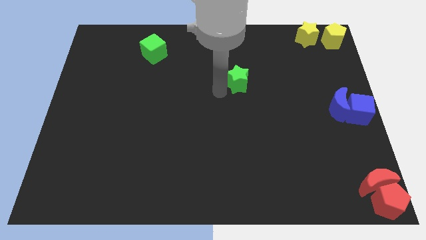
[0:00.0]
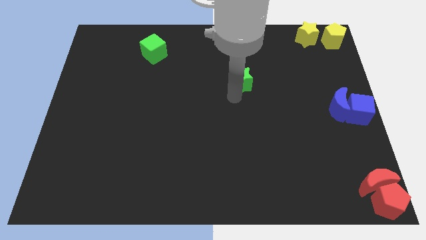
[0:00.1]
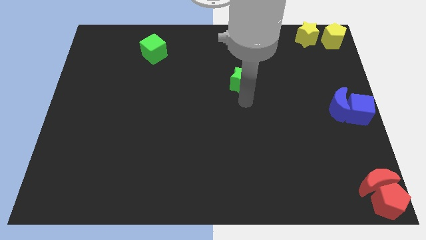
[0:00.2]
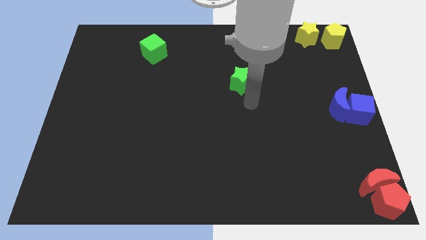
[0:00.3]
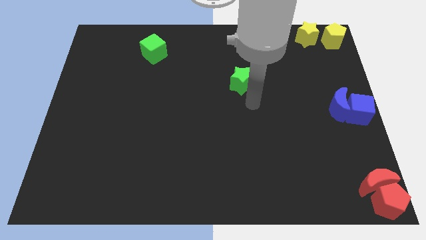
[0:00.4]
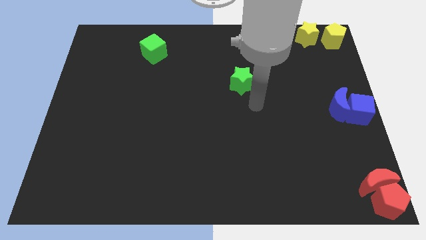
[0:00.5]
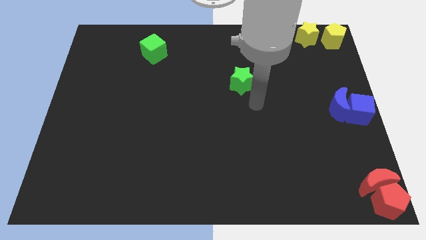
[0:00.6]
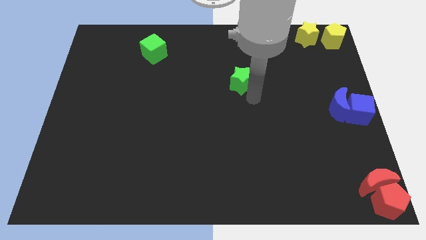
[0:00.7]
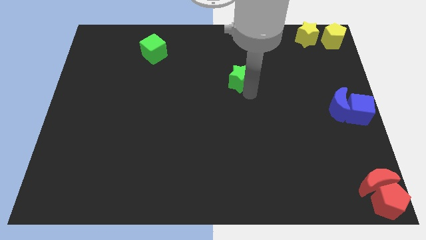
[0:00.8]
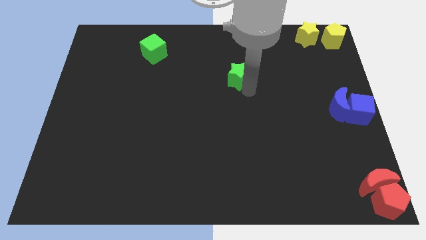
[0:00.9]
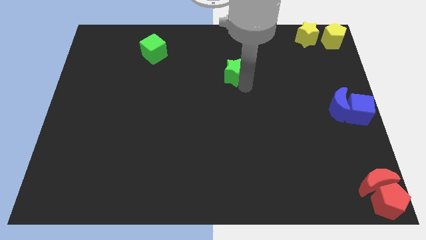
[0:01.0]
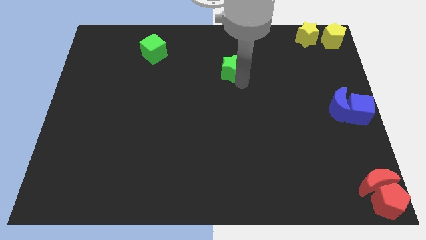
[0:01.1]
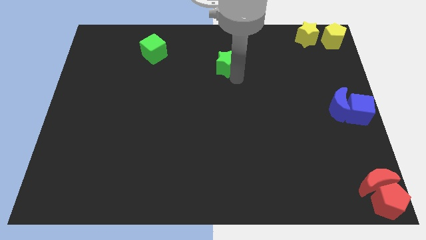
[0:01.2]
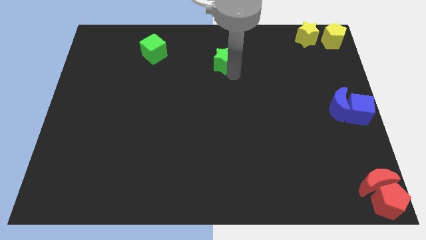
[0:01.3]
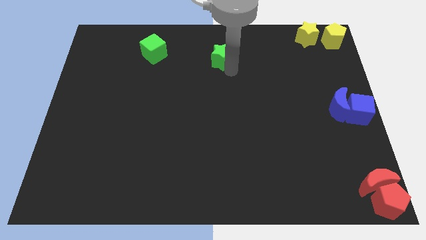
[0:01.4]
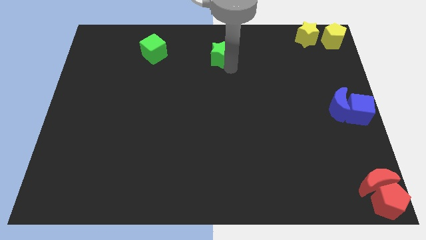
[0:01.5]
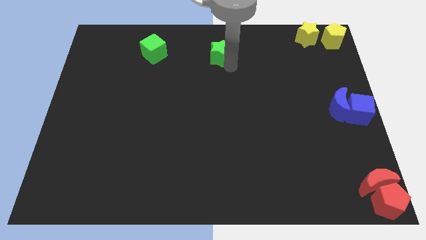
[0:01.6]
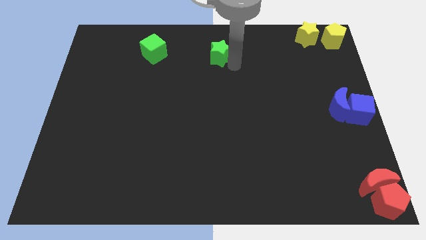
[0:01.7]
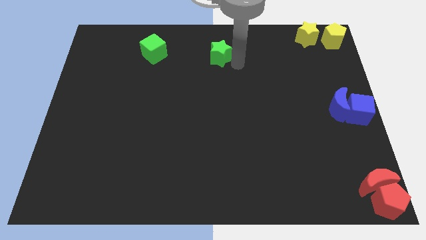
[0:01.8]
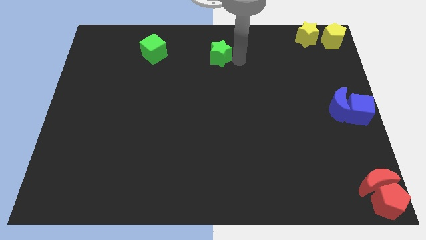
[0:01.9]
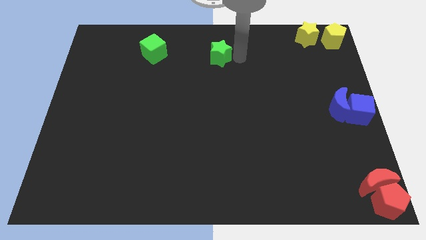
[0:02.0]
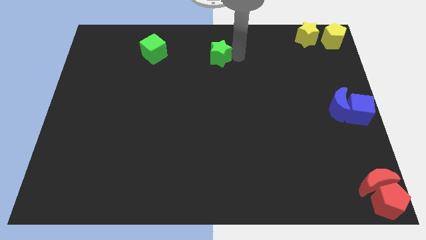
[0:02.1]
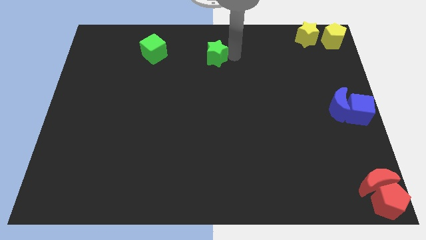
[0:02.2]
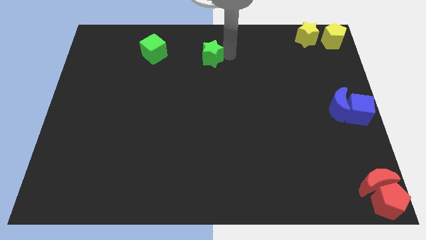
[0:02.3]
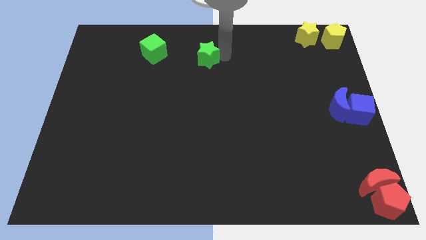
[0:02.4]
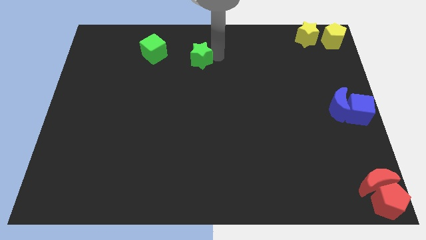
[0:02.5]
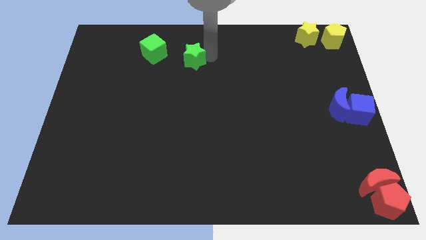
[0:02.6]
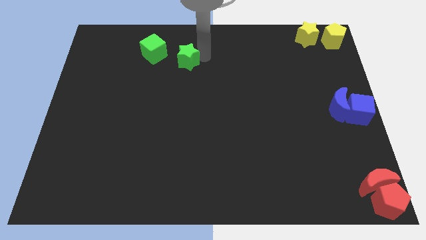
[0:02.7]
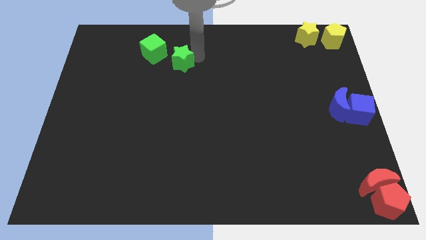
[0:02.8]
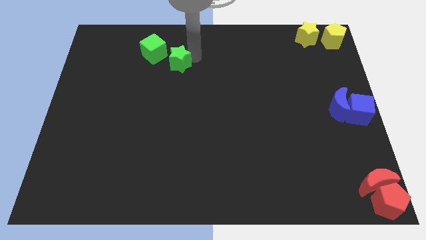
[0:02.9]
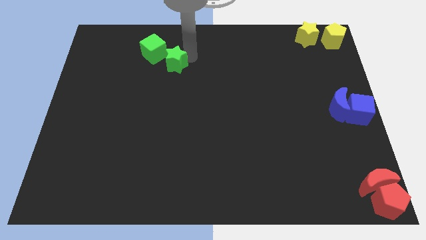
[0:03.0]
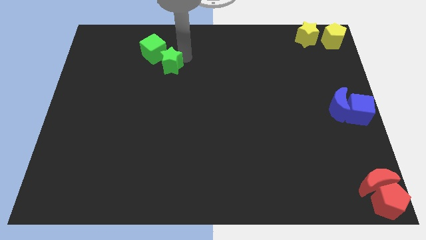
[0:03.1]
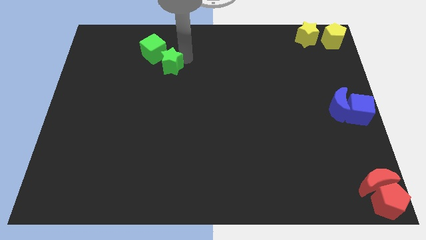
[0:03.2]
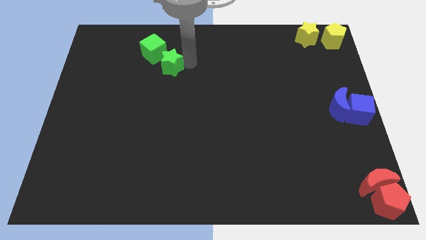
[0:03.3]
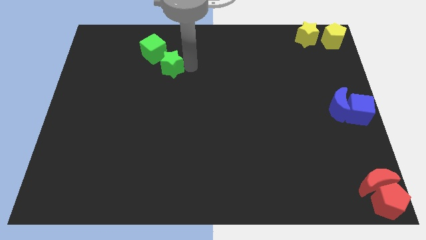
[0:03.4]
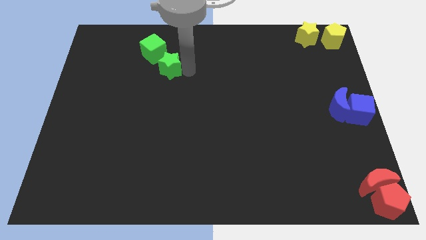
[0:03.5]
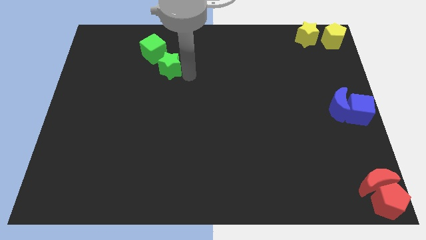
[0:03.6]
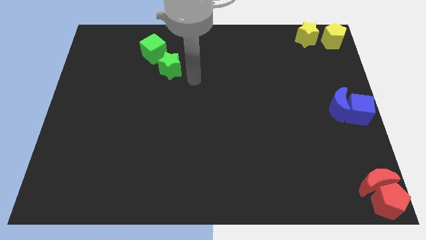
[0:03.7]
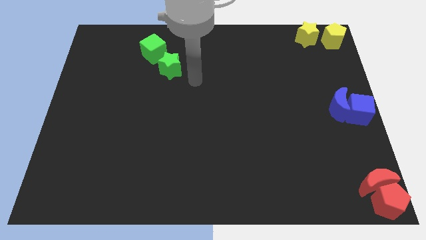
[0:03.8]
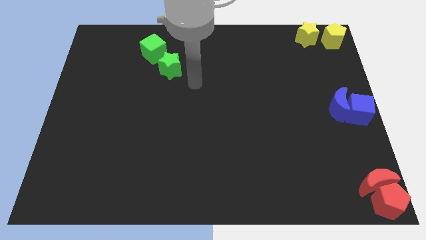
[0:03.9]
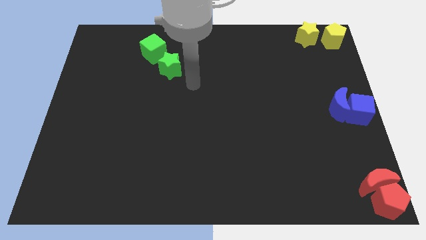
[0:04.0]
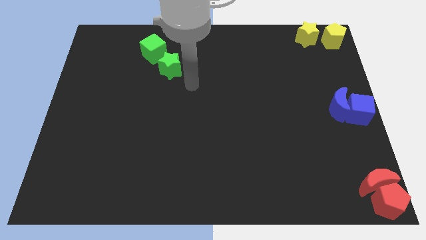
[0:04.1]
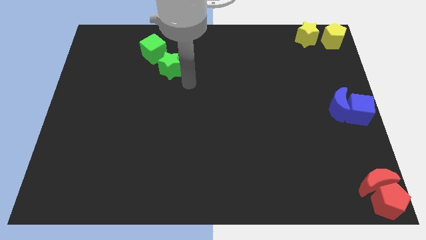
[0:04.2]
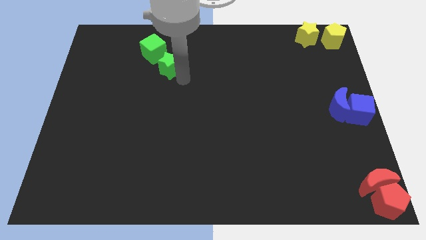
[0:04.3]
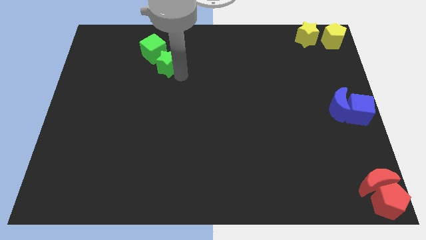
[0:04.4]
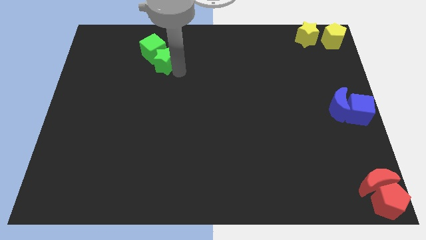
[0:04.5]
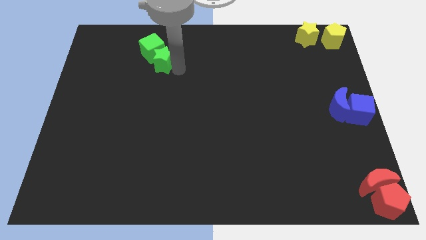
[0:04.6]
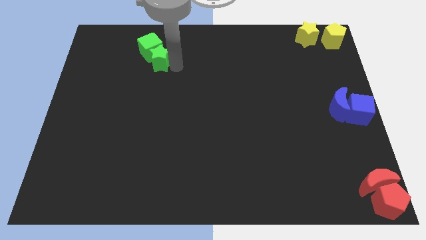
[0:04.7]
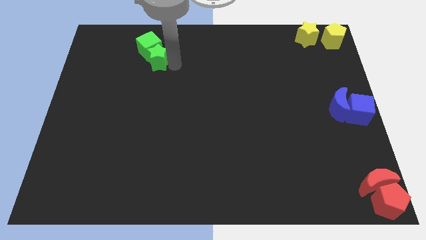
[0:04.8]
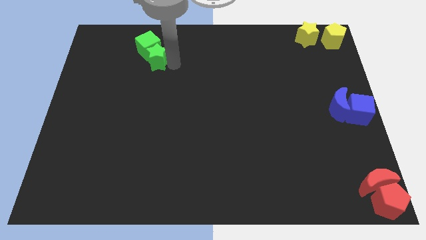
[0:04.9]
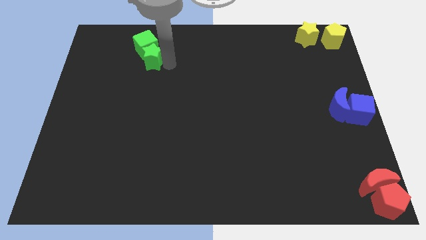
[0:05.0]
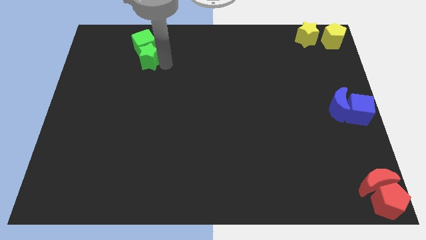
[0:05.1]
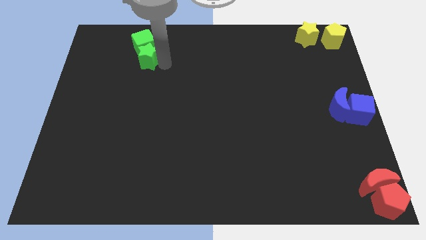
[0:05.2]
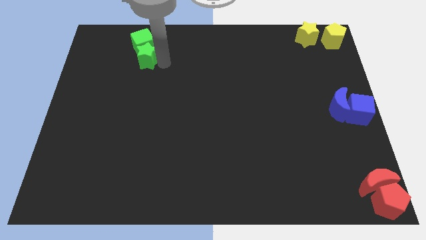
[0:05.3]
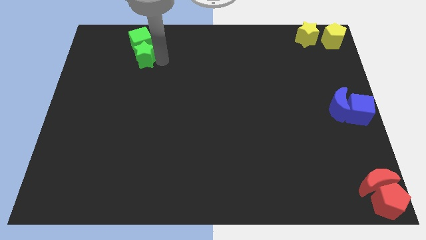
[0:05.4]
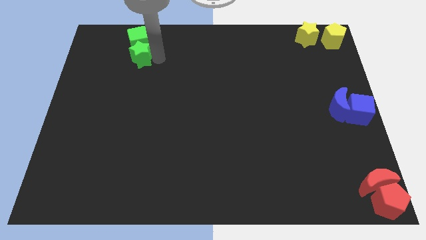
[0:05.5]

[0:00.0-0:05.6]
move the green cube with the green star towards the top left corner of the board

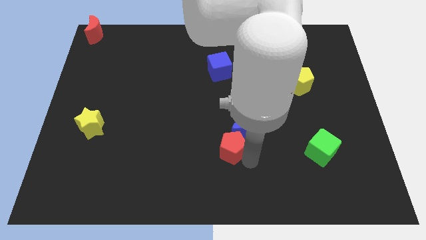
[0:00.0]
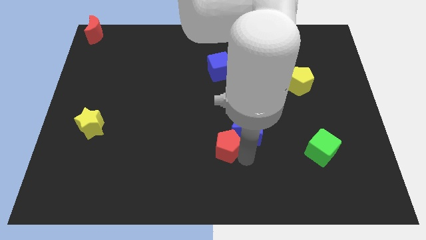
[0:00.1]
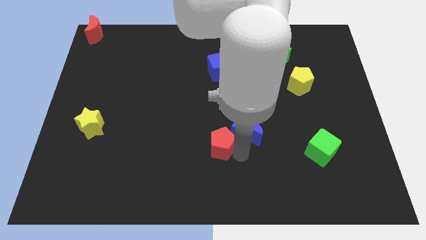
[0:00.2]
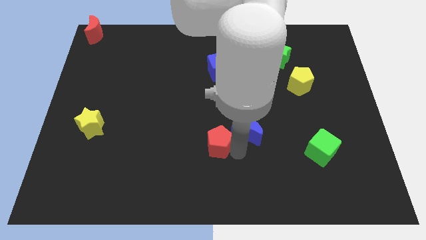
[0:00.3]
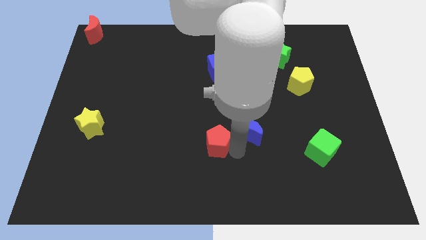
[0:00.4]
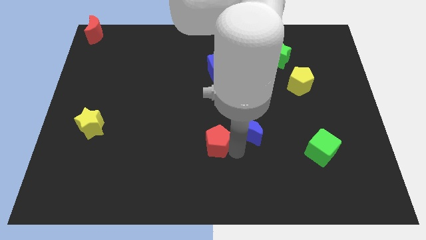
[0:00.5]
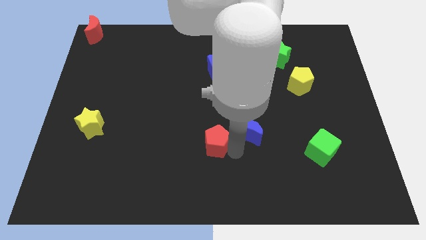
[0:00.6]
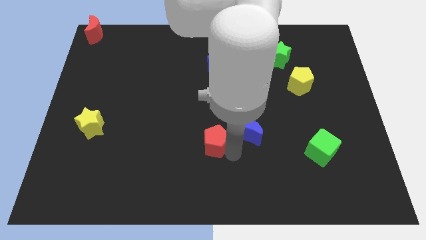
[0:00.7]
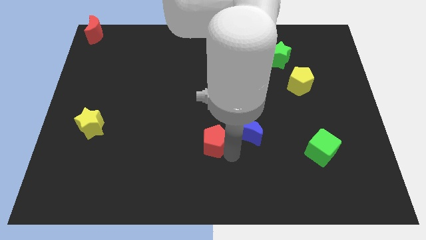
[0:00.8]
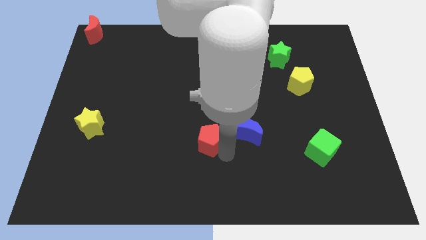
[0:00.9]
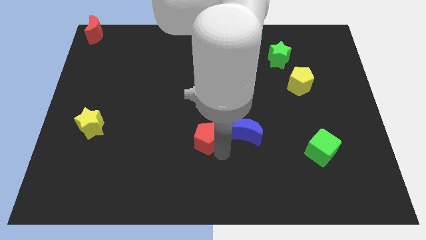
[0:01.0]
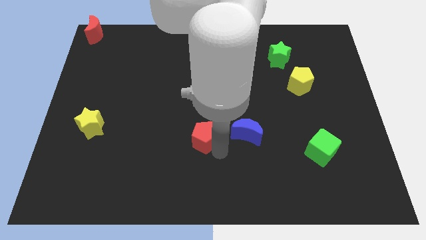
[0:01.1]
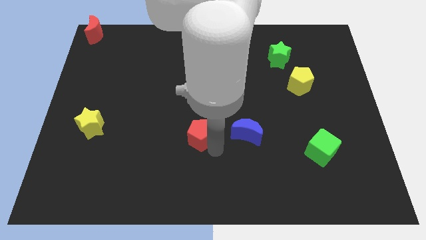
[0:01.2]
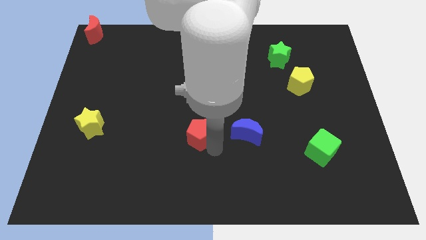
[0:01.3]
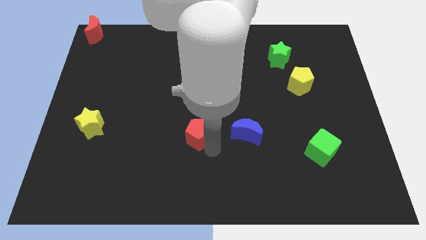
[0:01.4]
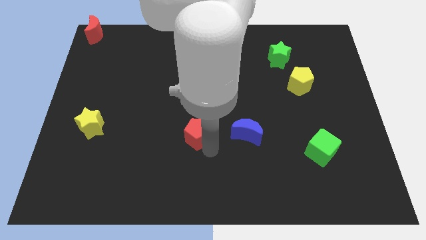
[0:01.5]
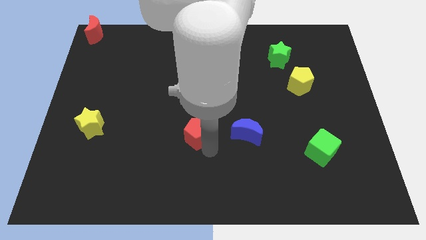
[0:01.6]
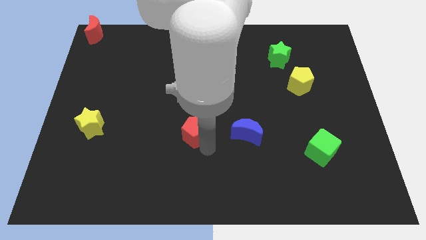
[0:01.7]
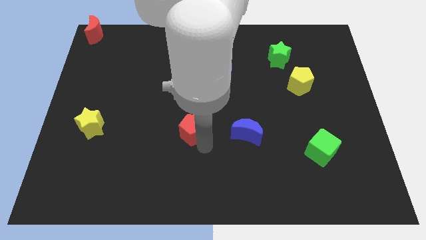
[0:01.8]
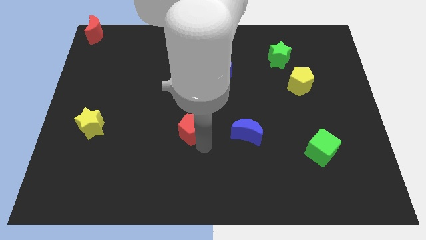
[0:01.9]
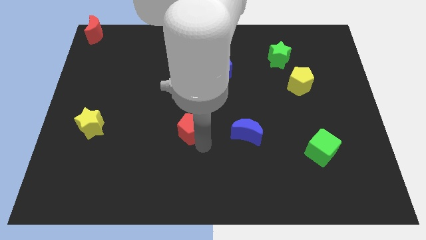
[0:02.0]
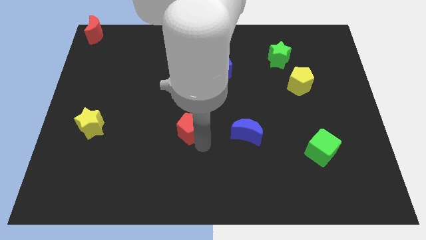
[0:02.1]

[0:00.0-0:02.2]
separate red pentagon from blue moon

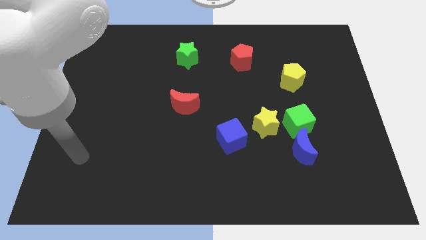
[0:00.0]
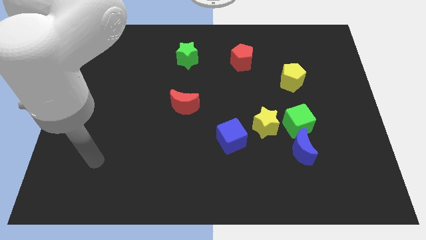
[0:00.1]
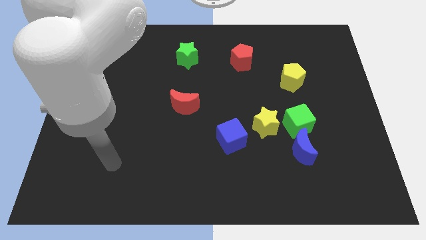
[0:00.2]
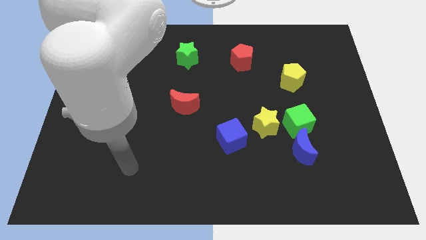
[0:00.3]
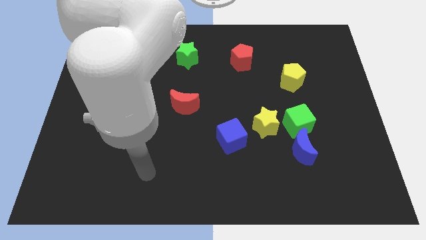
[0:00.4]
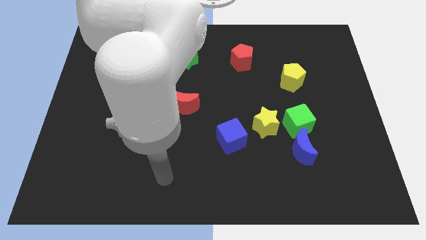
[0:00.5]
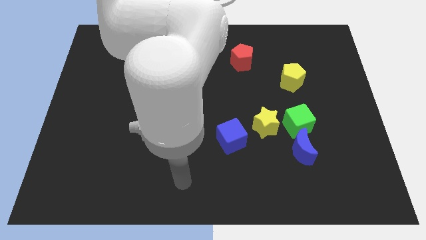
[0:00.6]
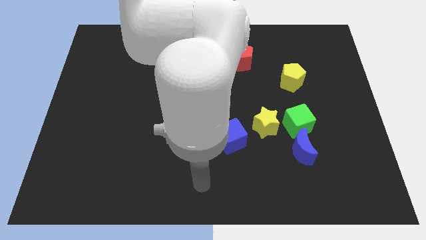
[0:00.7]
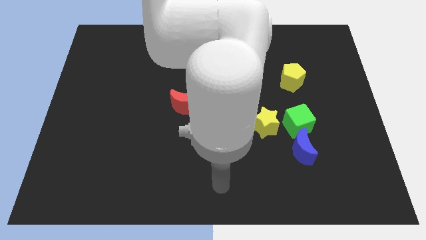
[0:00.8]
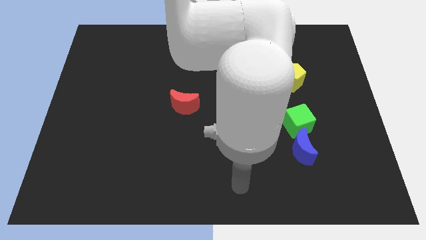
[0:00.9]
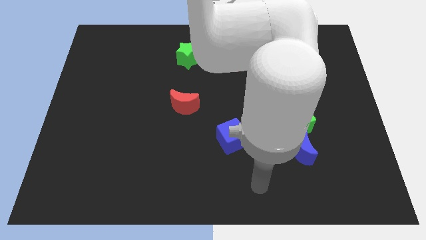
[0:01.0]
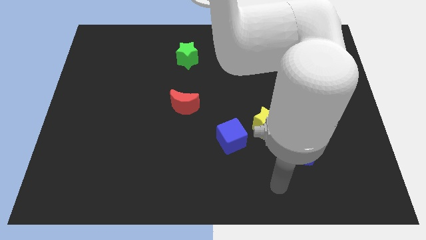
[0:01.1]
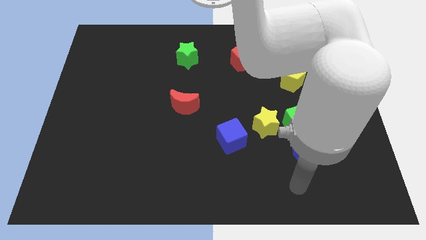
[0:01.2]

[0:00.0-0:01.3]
point your arm at the bottom side of the yellow star
